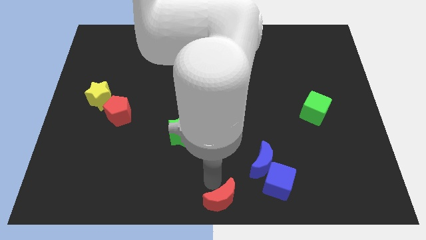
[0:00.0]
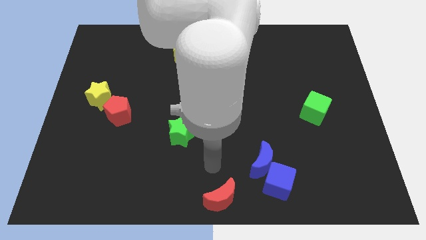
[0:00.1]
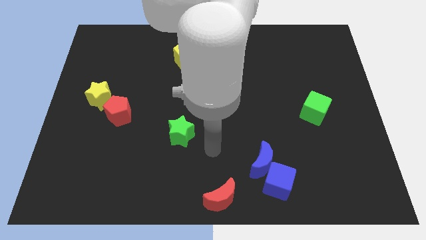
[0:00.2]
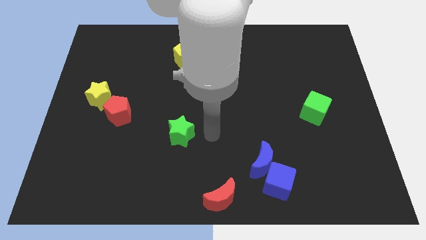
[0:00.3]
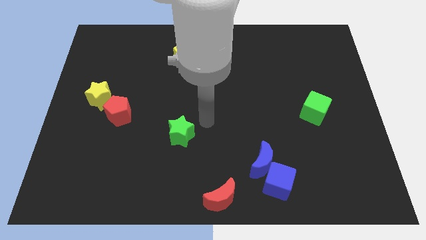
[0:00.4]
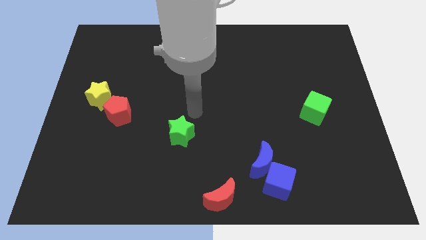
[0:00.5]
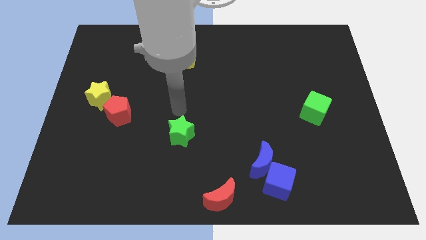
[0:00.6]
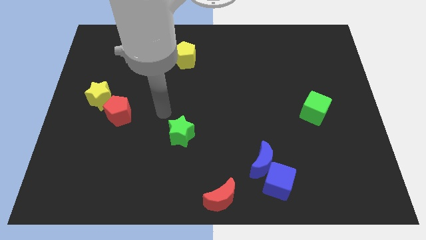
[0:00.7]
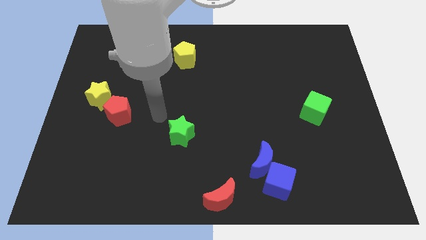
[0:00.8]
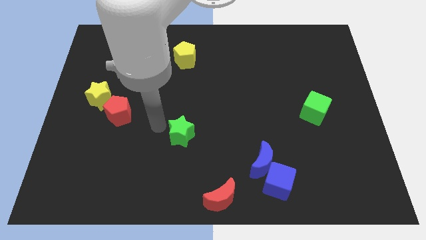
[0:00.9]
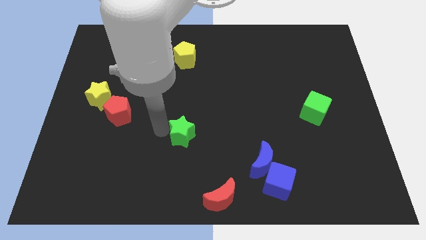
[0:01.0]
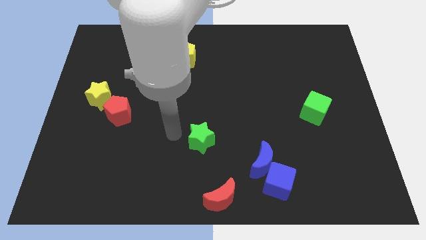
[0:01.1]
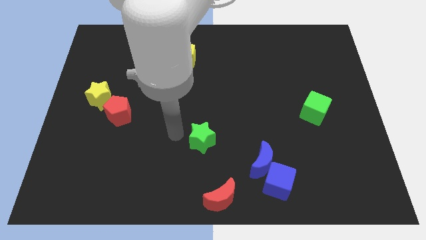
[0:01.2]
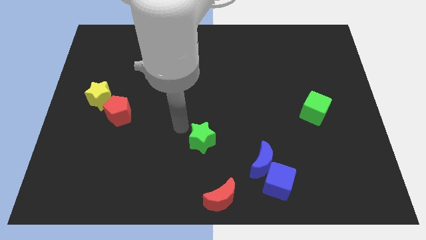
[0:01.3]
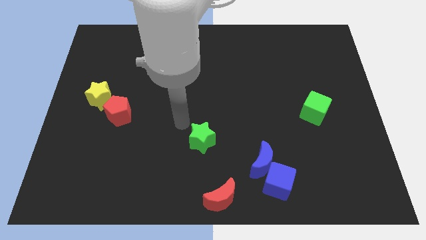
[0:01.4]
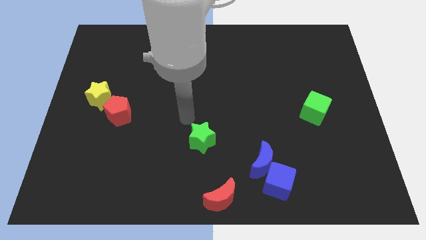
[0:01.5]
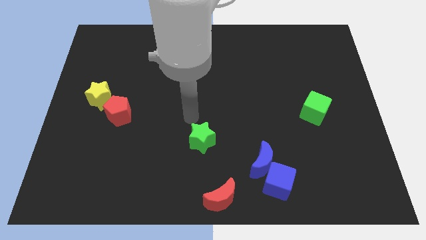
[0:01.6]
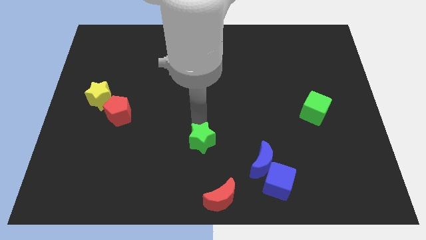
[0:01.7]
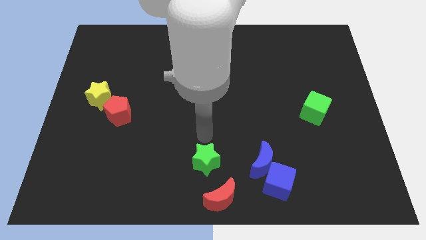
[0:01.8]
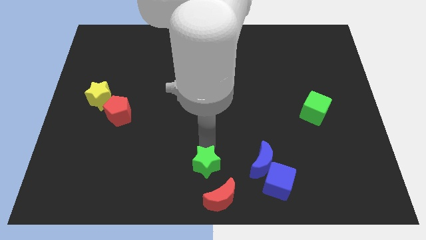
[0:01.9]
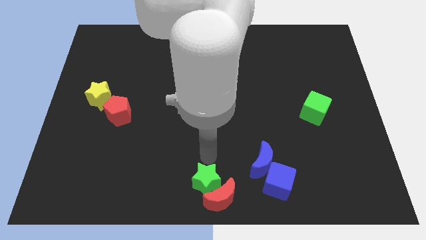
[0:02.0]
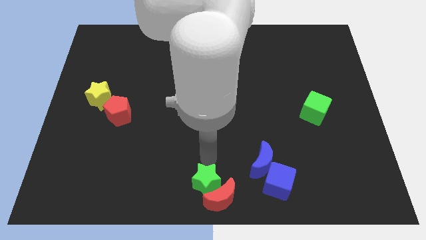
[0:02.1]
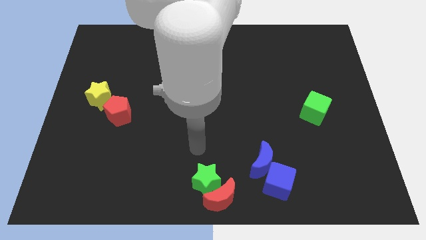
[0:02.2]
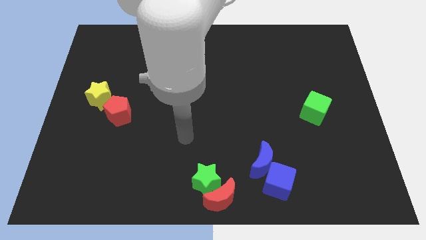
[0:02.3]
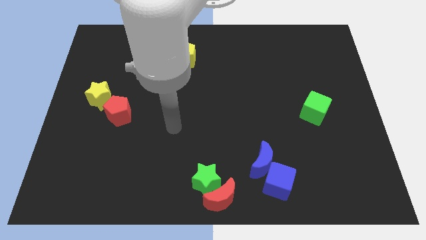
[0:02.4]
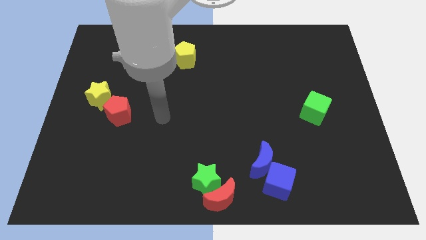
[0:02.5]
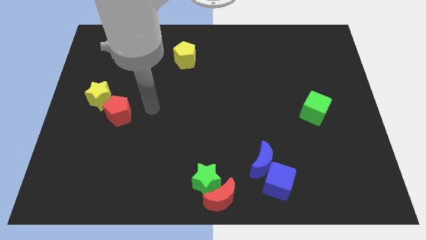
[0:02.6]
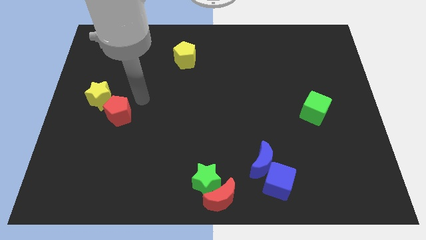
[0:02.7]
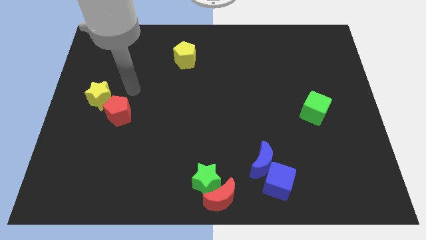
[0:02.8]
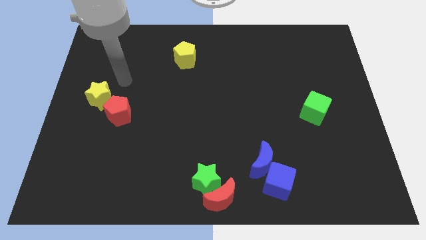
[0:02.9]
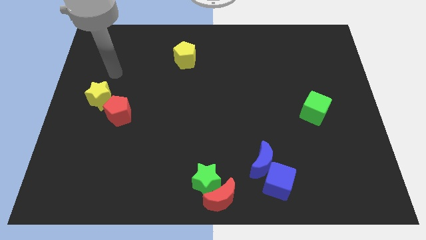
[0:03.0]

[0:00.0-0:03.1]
push the green star to the red moon

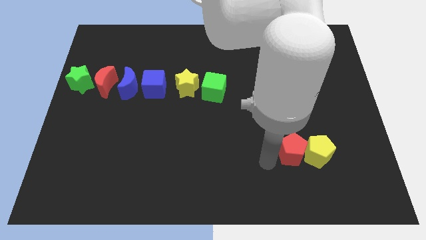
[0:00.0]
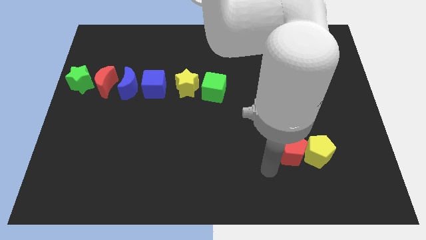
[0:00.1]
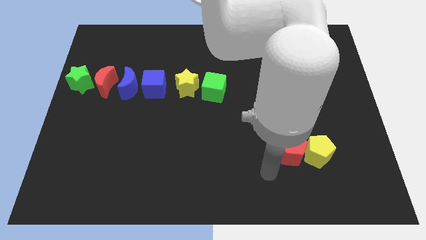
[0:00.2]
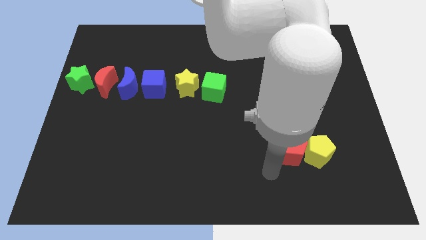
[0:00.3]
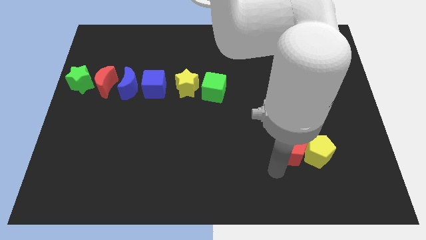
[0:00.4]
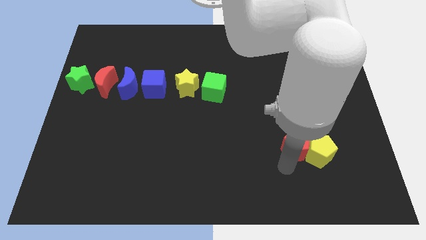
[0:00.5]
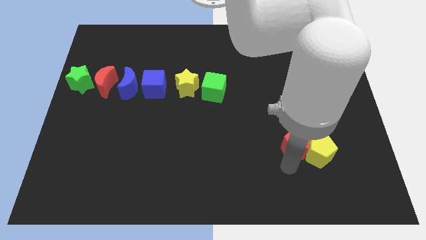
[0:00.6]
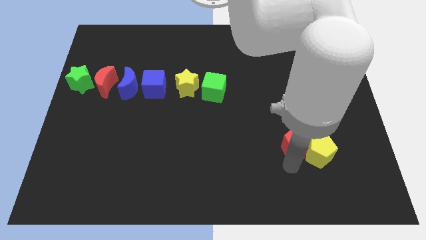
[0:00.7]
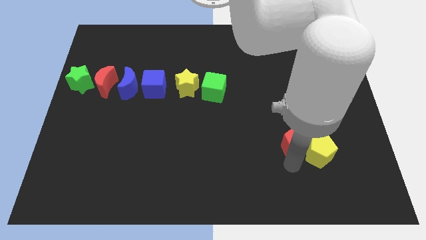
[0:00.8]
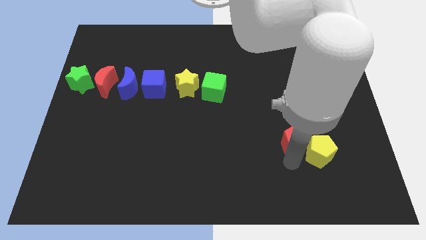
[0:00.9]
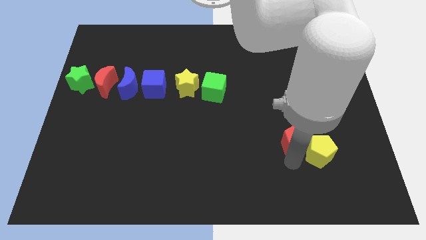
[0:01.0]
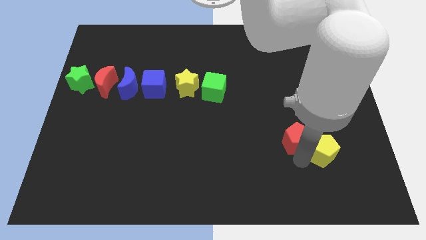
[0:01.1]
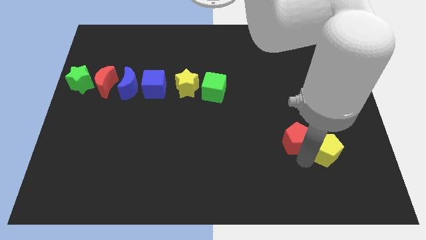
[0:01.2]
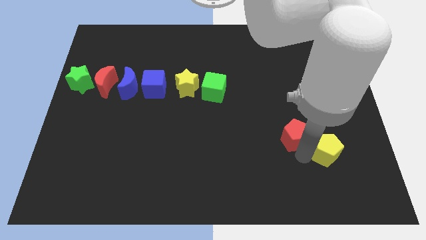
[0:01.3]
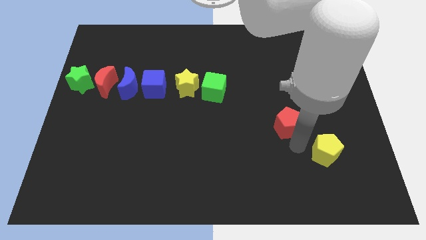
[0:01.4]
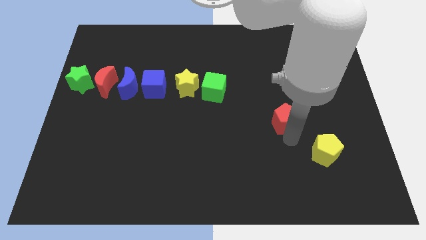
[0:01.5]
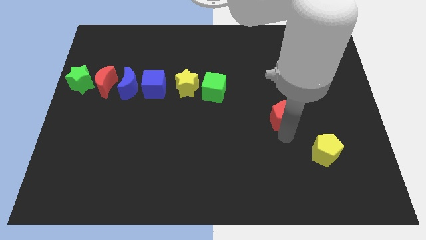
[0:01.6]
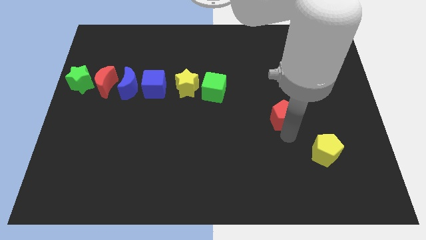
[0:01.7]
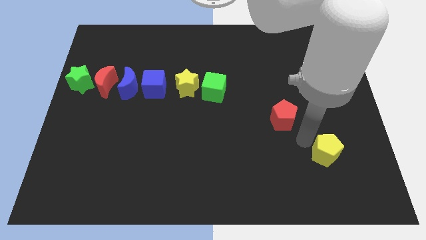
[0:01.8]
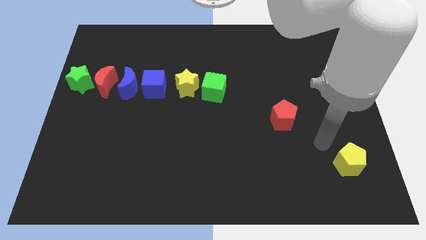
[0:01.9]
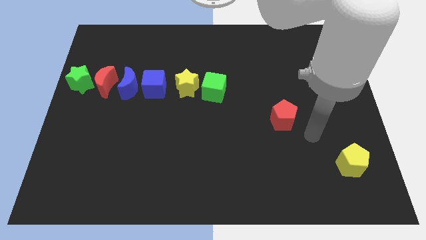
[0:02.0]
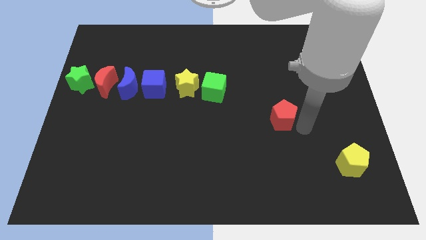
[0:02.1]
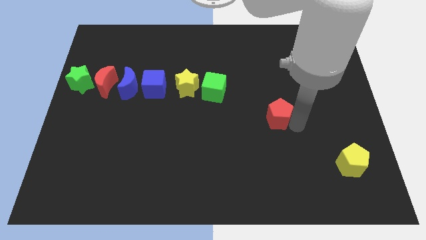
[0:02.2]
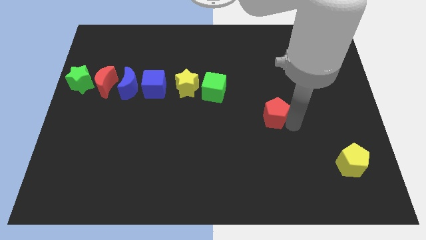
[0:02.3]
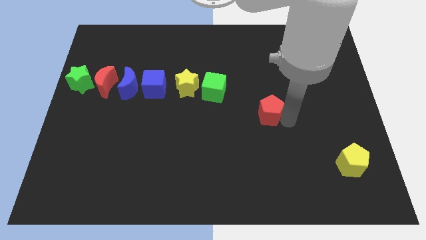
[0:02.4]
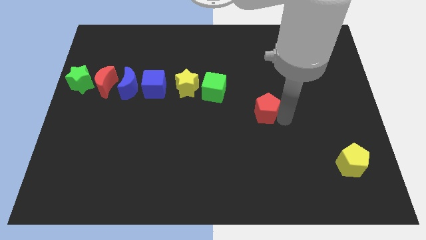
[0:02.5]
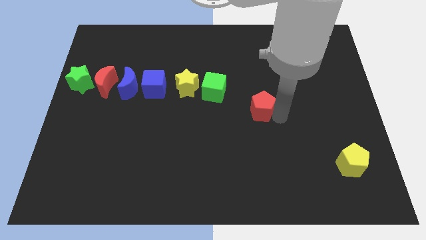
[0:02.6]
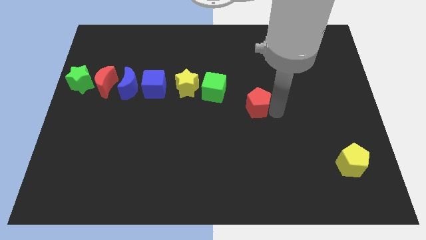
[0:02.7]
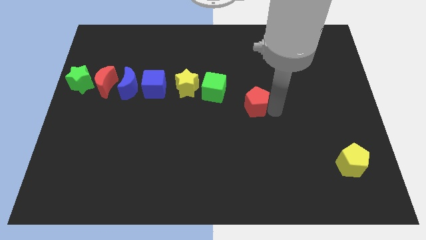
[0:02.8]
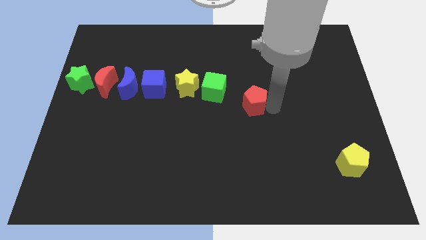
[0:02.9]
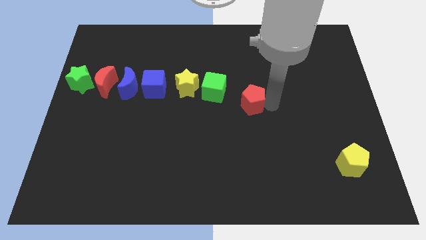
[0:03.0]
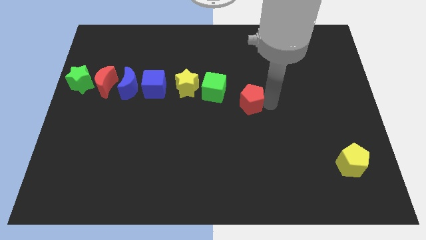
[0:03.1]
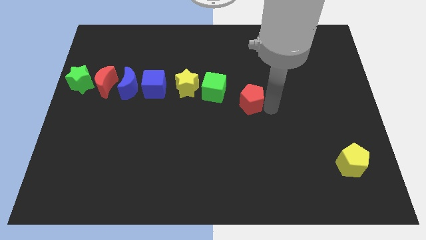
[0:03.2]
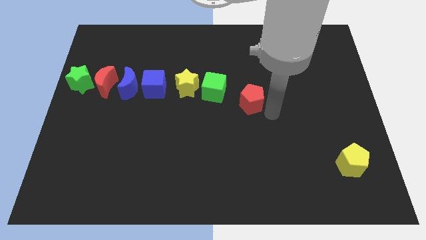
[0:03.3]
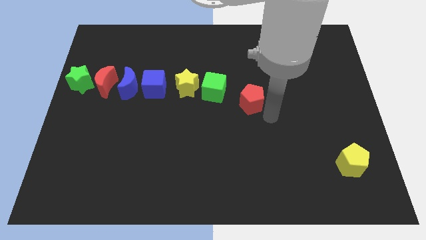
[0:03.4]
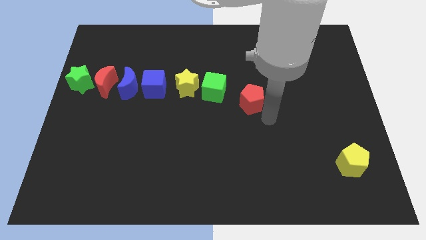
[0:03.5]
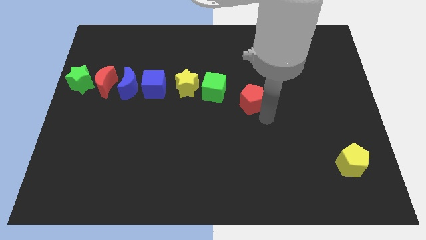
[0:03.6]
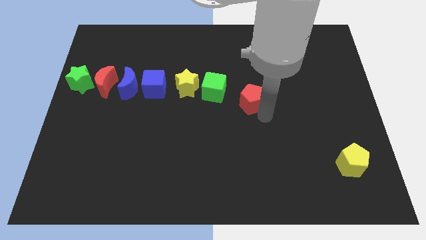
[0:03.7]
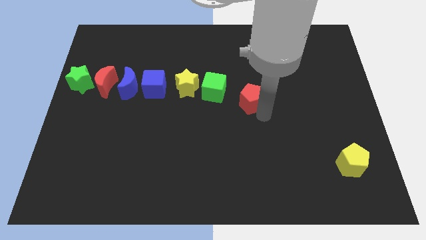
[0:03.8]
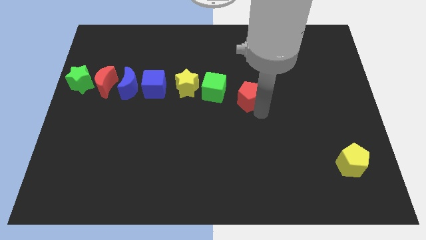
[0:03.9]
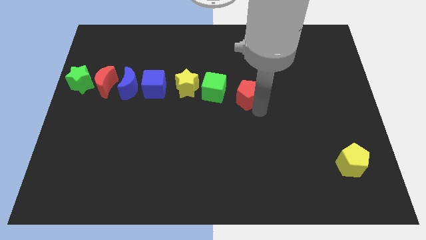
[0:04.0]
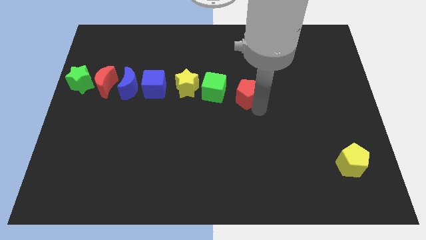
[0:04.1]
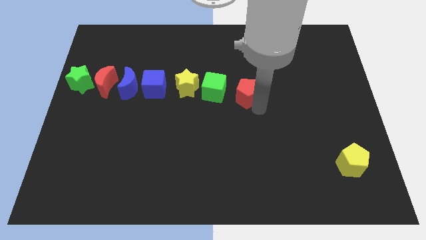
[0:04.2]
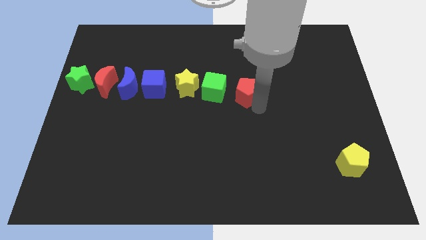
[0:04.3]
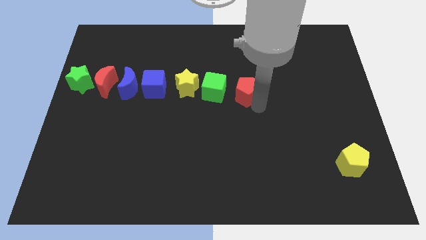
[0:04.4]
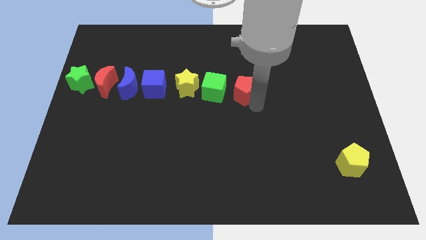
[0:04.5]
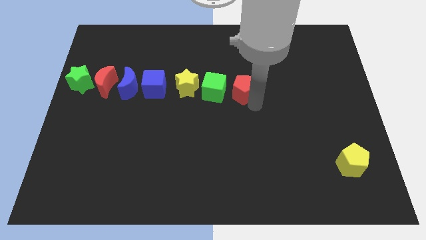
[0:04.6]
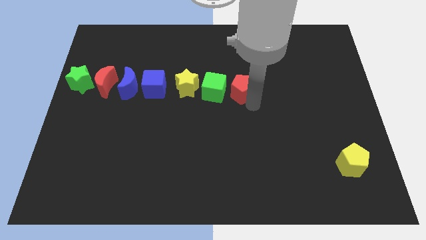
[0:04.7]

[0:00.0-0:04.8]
place red pentagon parallel to the red crescent

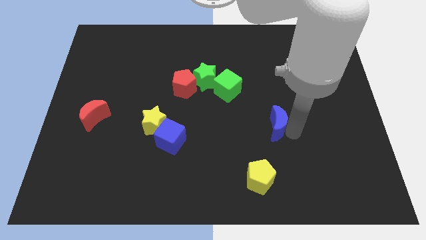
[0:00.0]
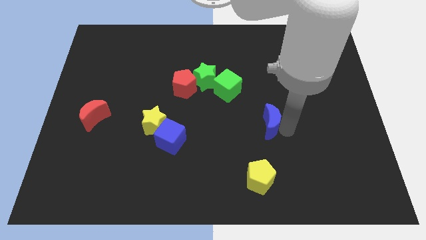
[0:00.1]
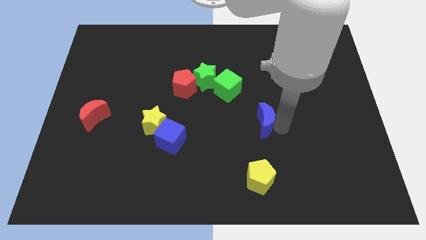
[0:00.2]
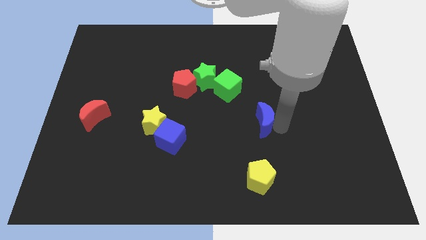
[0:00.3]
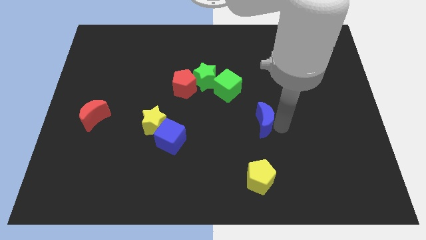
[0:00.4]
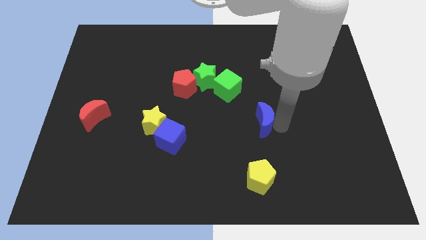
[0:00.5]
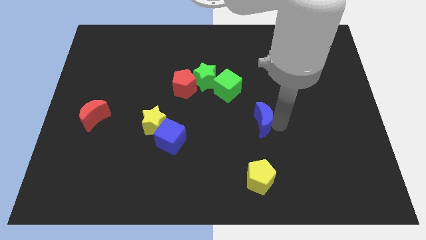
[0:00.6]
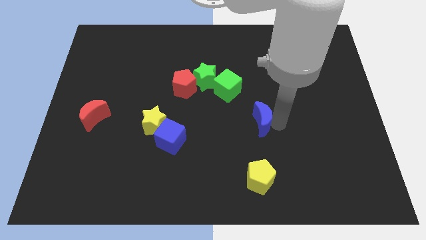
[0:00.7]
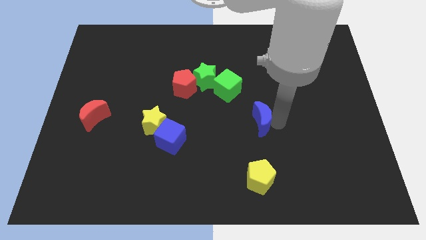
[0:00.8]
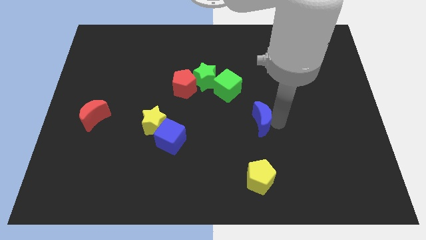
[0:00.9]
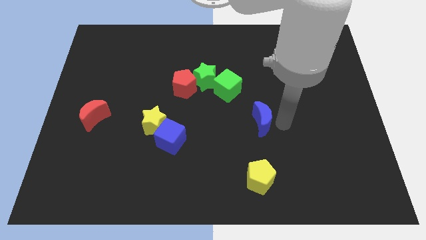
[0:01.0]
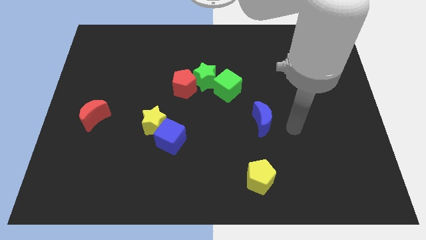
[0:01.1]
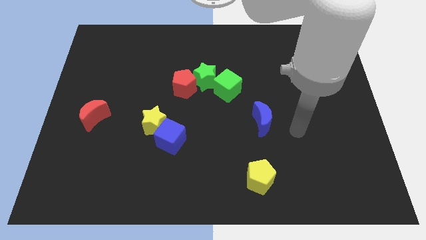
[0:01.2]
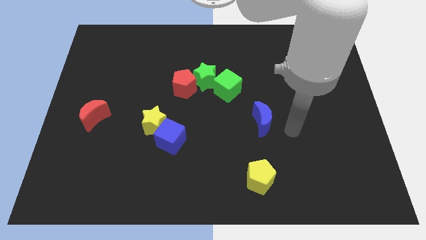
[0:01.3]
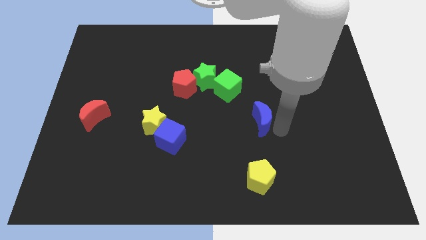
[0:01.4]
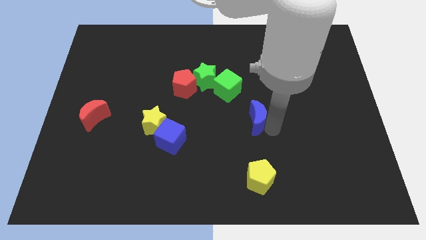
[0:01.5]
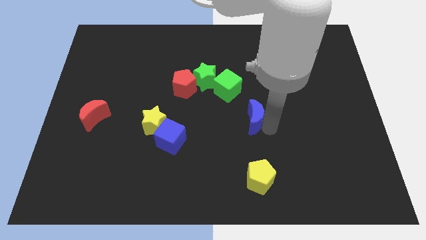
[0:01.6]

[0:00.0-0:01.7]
place the blue moon vertically above the yellow pentagon
